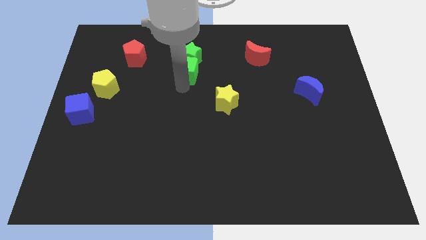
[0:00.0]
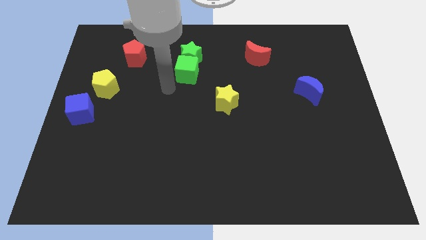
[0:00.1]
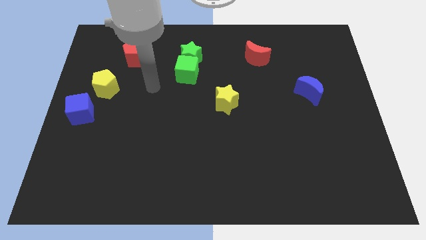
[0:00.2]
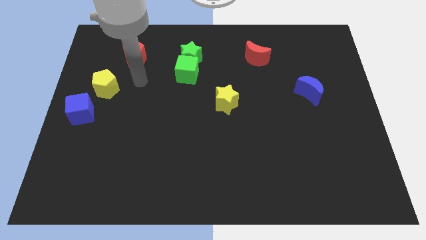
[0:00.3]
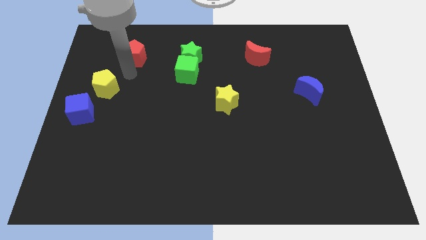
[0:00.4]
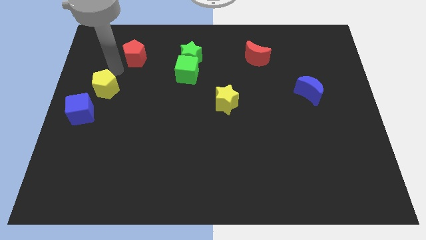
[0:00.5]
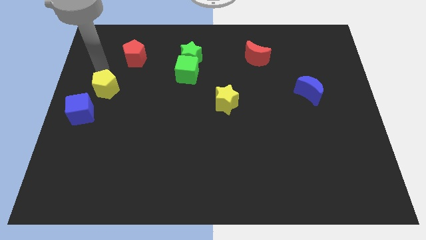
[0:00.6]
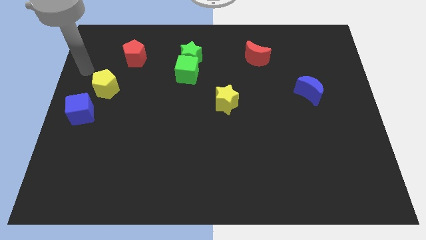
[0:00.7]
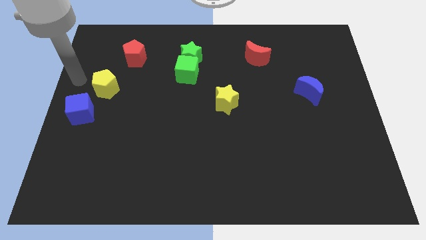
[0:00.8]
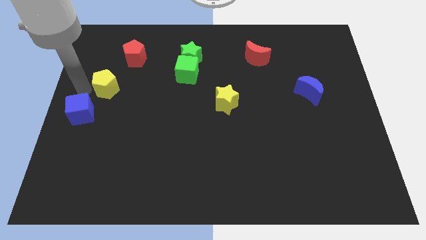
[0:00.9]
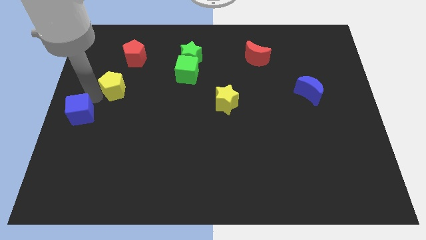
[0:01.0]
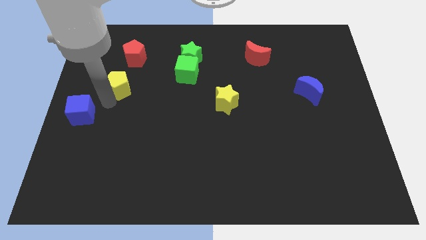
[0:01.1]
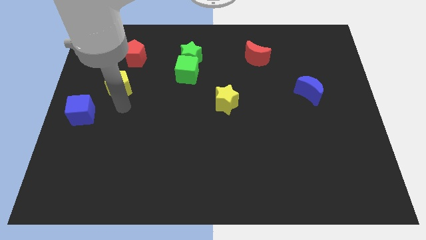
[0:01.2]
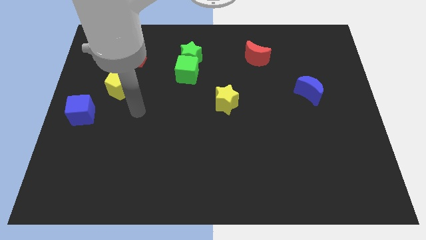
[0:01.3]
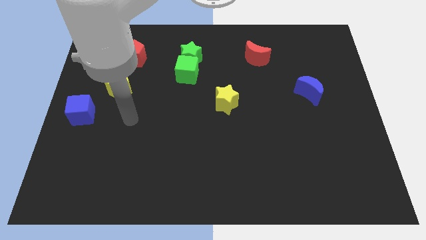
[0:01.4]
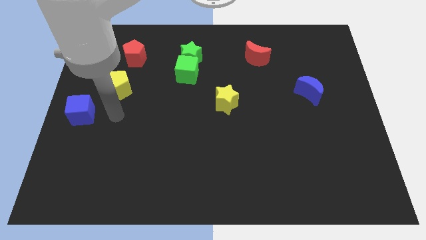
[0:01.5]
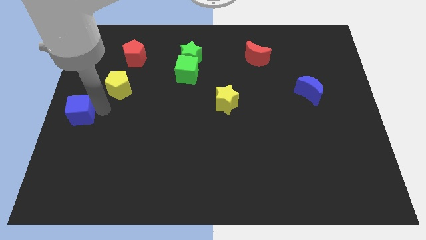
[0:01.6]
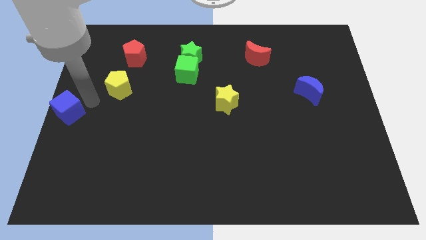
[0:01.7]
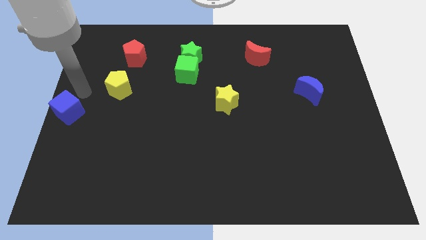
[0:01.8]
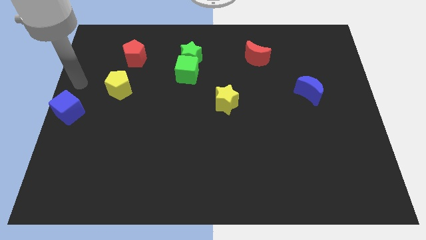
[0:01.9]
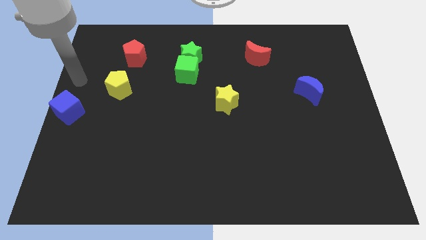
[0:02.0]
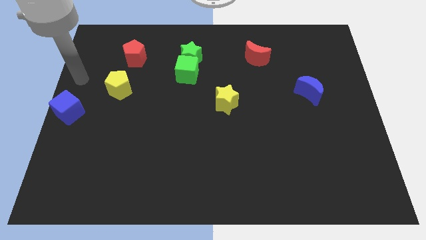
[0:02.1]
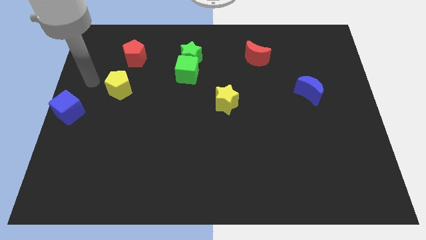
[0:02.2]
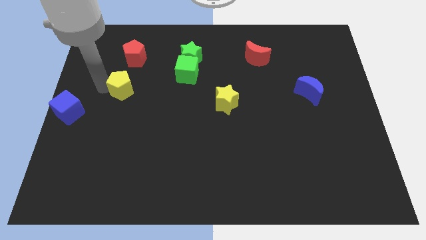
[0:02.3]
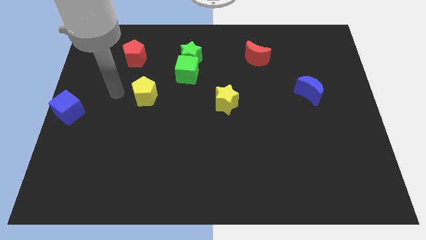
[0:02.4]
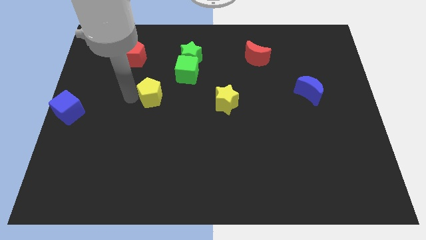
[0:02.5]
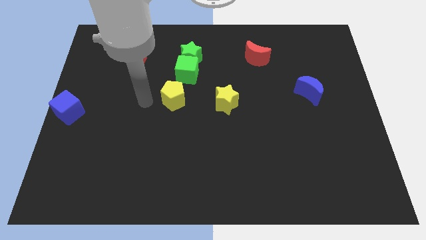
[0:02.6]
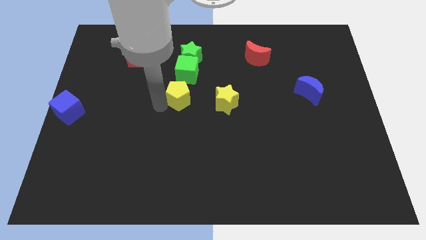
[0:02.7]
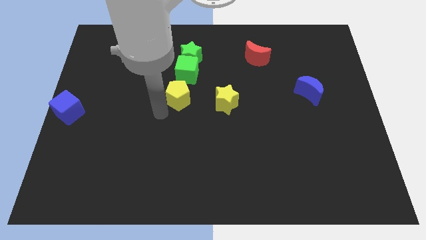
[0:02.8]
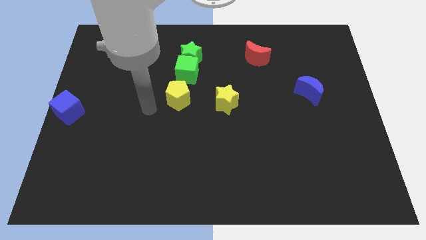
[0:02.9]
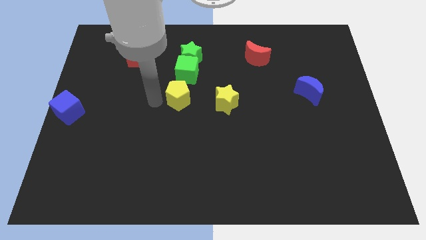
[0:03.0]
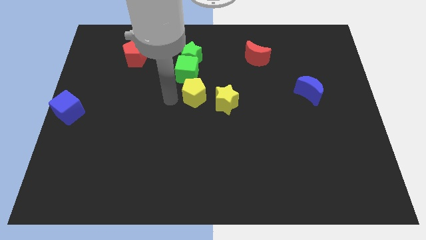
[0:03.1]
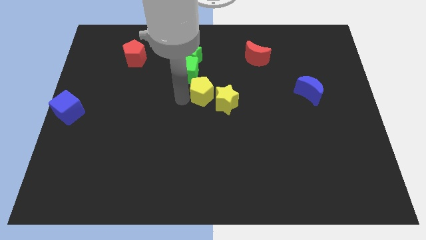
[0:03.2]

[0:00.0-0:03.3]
place the yellow pentagon to the left side of yellow star

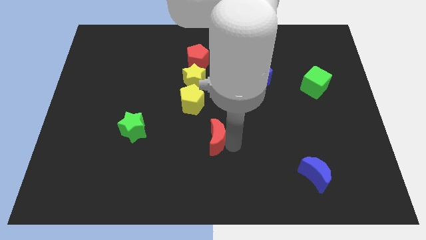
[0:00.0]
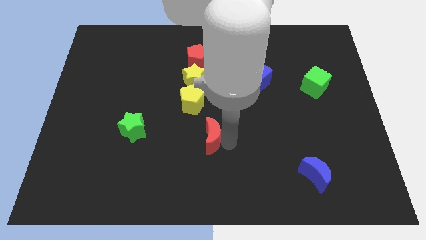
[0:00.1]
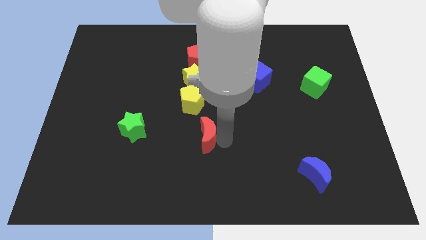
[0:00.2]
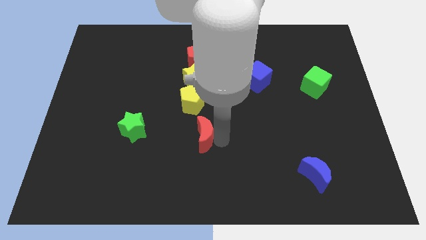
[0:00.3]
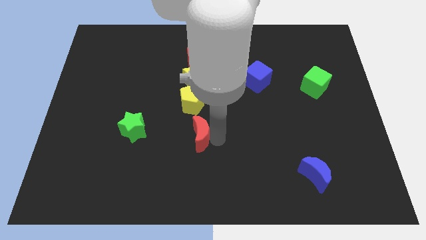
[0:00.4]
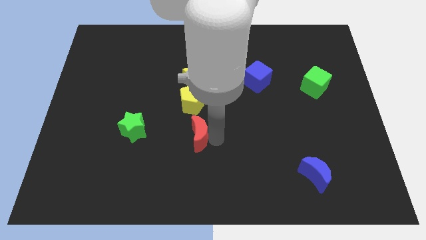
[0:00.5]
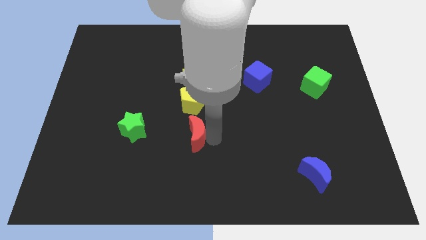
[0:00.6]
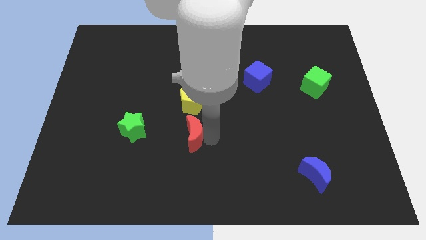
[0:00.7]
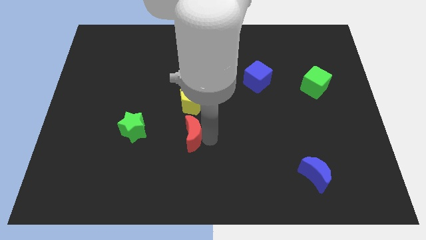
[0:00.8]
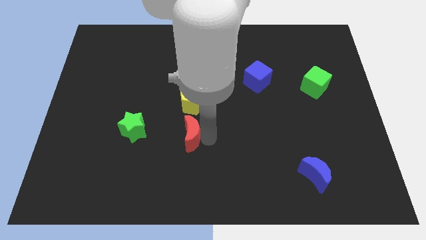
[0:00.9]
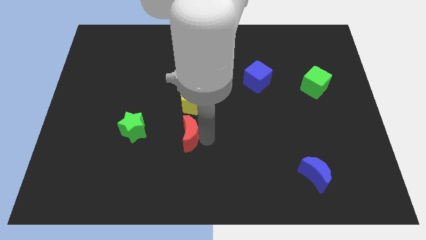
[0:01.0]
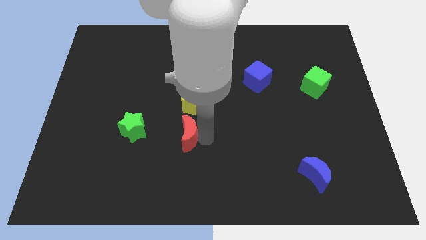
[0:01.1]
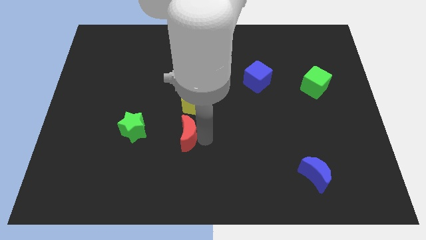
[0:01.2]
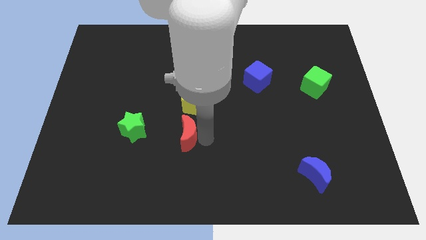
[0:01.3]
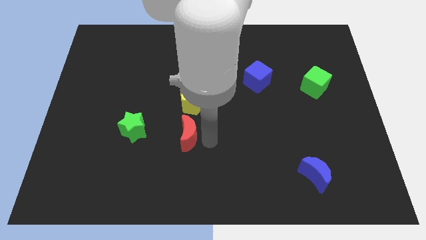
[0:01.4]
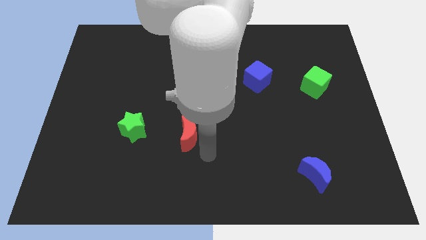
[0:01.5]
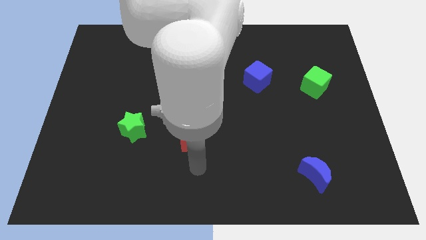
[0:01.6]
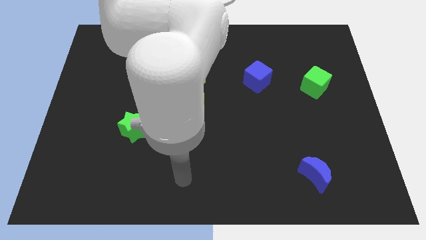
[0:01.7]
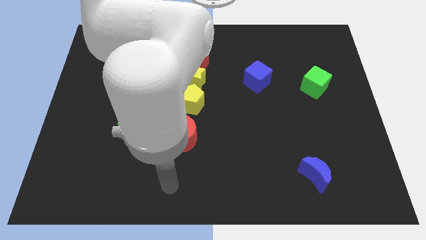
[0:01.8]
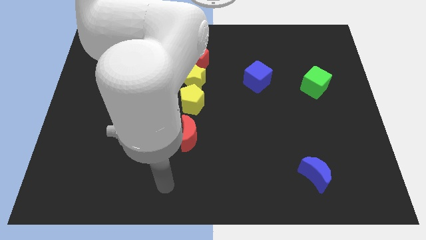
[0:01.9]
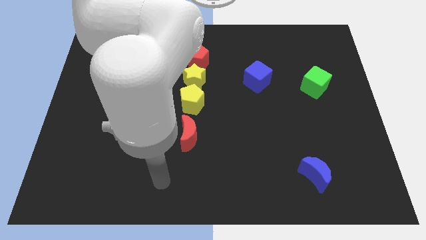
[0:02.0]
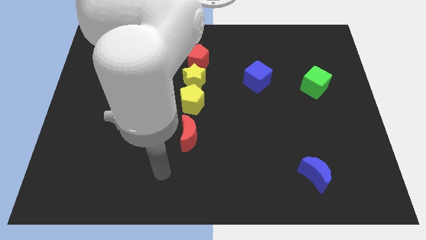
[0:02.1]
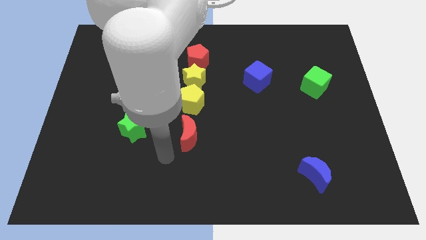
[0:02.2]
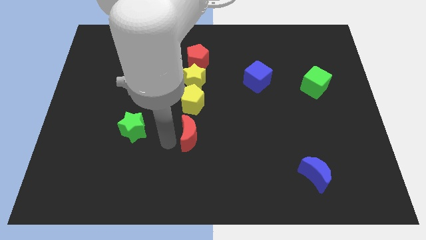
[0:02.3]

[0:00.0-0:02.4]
place the red moon below the yellow pentagon

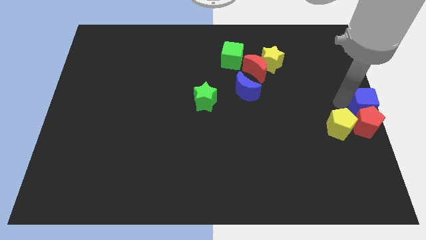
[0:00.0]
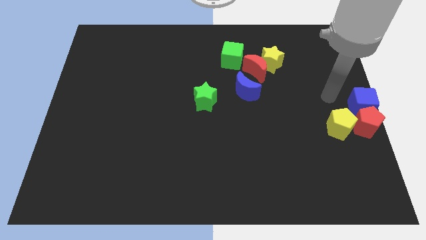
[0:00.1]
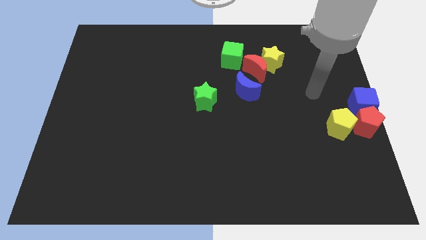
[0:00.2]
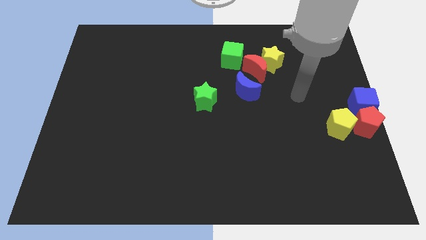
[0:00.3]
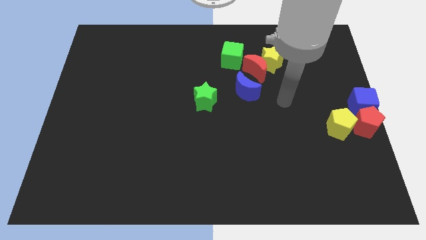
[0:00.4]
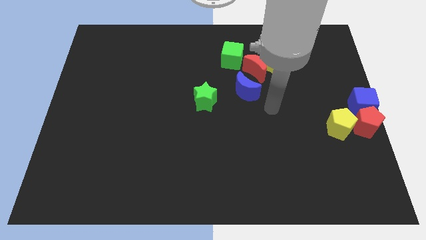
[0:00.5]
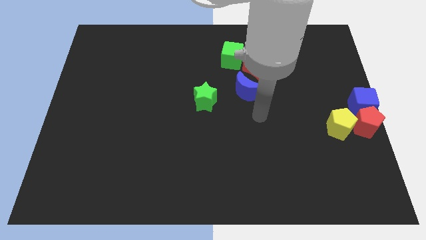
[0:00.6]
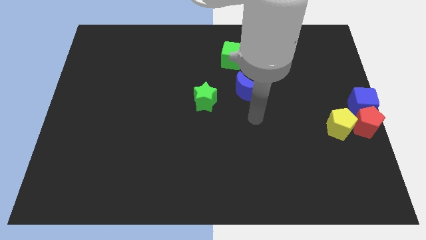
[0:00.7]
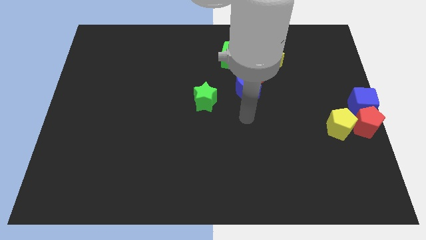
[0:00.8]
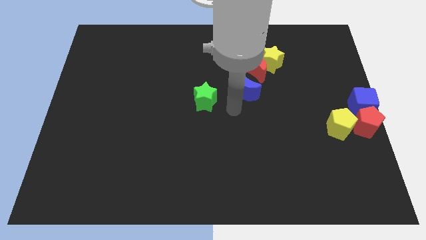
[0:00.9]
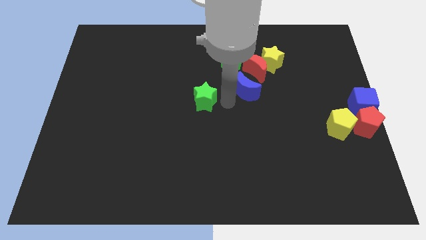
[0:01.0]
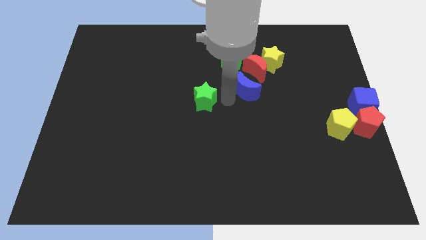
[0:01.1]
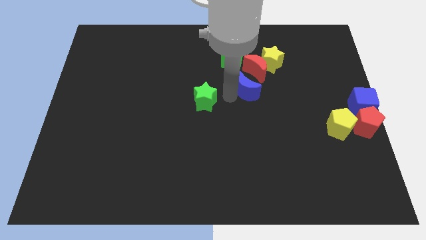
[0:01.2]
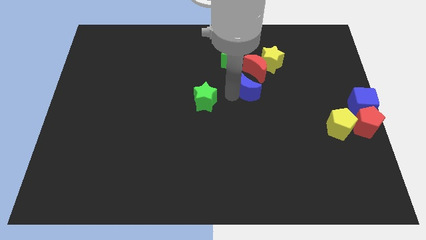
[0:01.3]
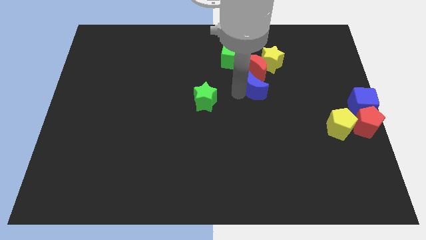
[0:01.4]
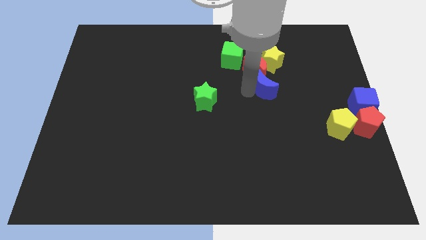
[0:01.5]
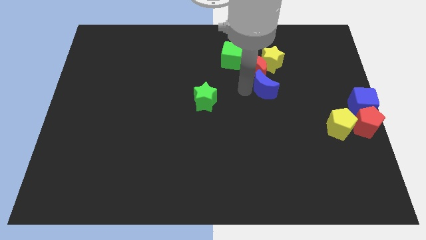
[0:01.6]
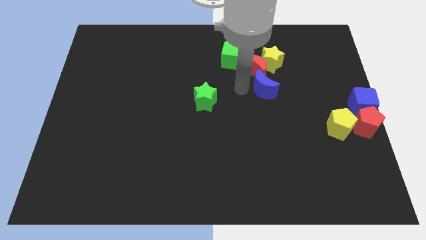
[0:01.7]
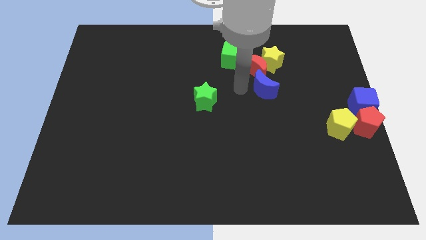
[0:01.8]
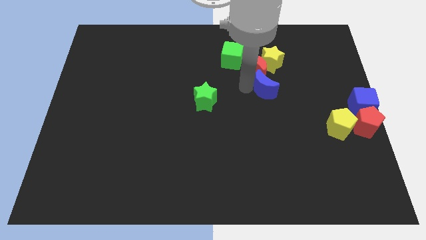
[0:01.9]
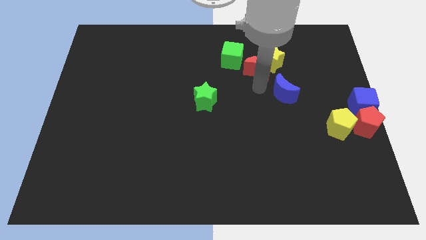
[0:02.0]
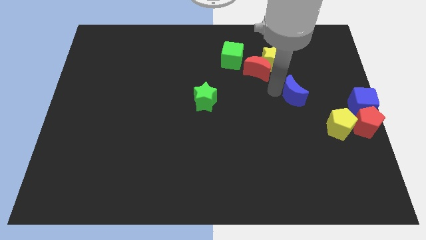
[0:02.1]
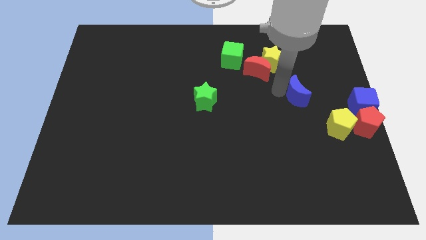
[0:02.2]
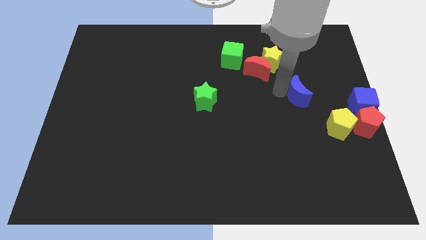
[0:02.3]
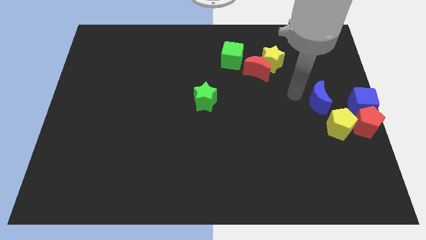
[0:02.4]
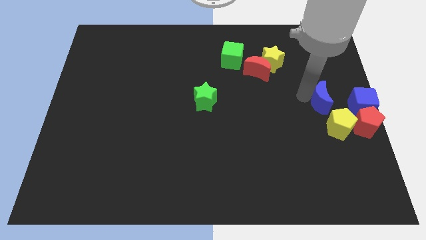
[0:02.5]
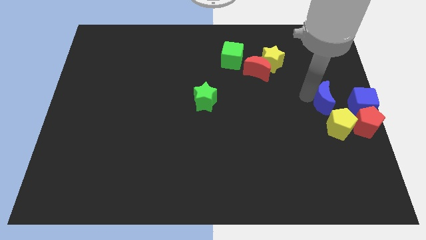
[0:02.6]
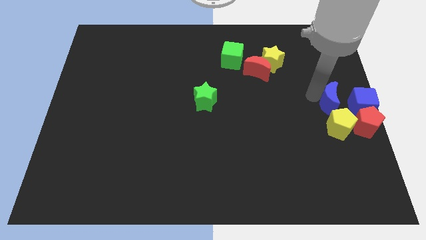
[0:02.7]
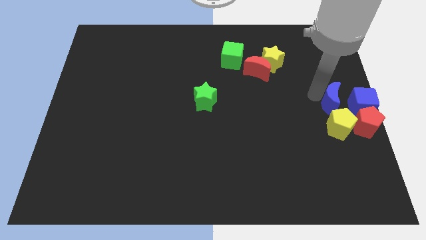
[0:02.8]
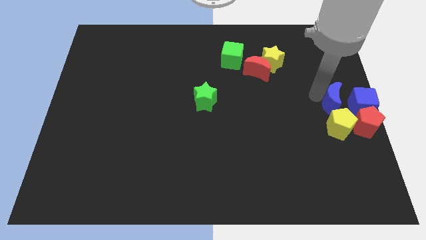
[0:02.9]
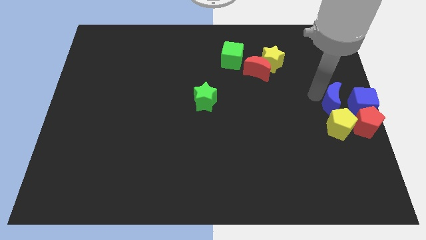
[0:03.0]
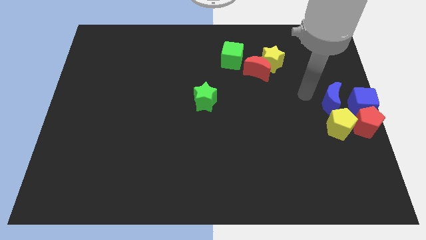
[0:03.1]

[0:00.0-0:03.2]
put the blue moon on the top of the yellow pentagon

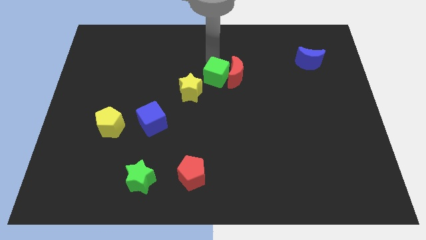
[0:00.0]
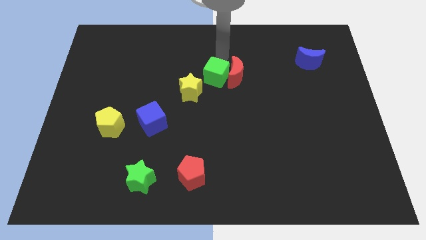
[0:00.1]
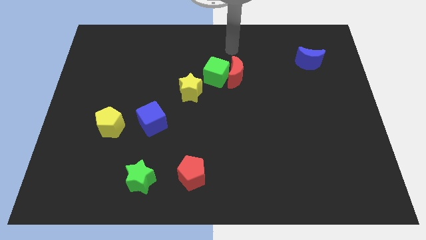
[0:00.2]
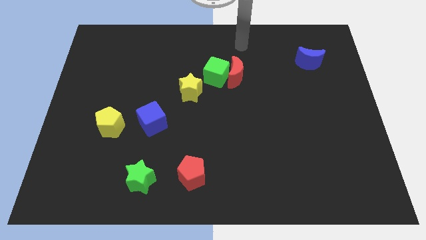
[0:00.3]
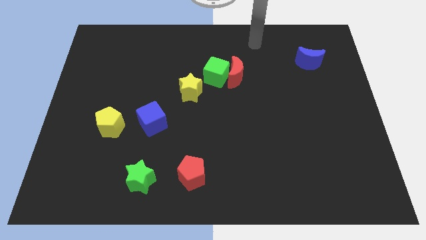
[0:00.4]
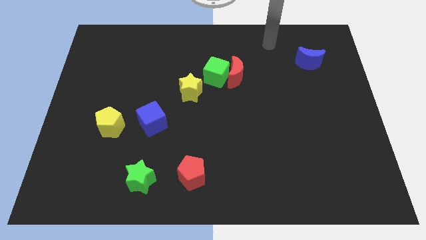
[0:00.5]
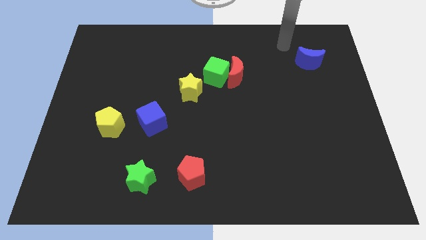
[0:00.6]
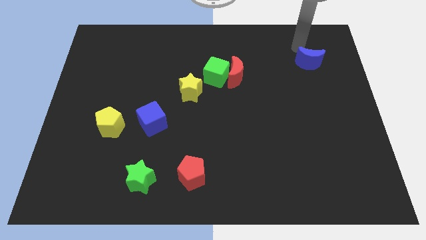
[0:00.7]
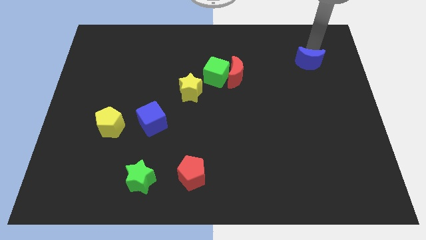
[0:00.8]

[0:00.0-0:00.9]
move your hand to the top of the blue crescent
